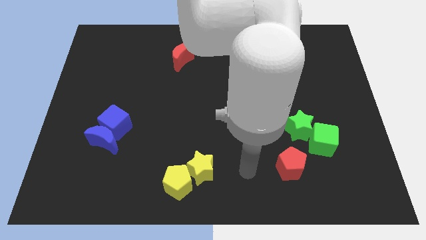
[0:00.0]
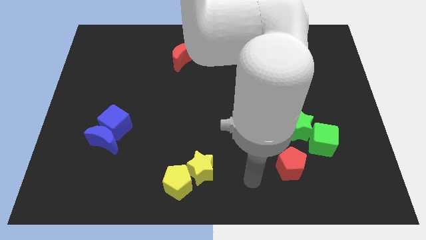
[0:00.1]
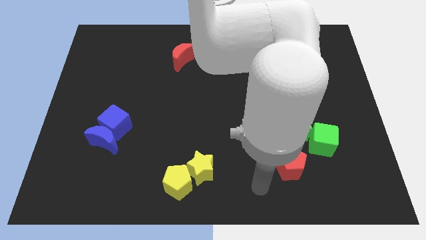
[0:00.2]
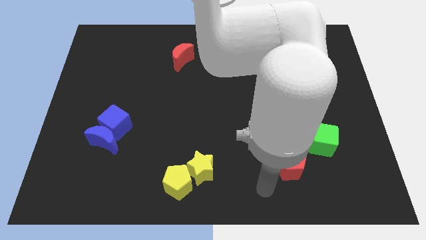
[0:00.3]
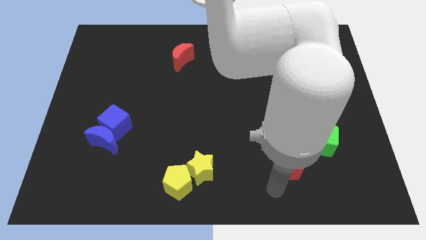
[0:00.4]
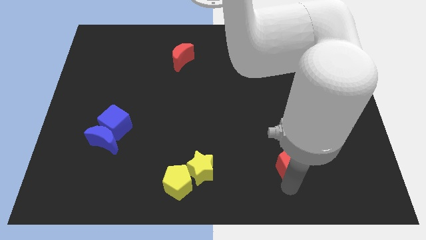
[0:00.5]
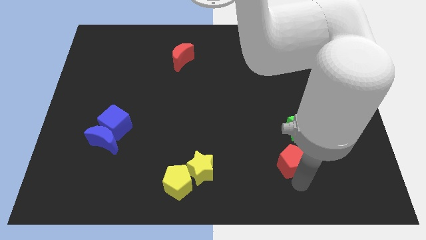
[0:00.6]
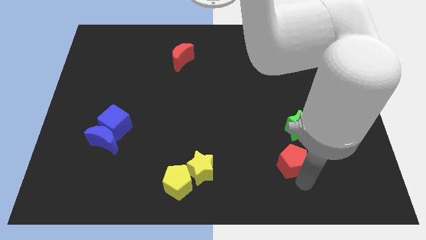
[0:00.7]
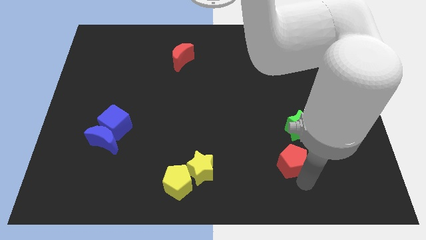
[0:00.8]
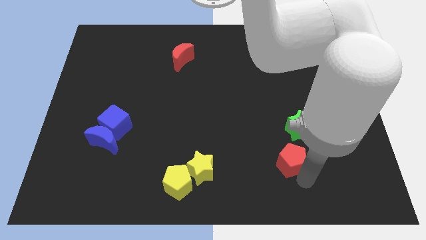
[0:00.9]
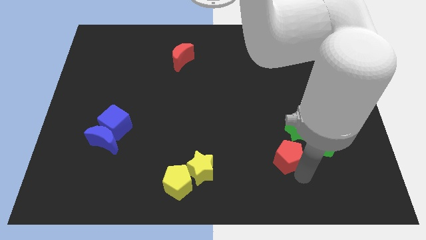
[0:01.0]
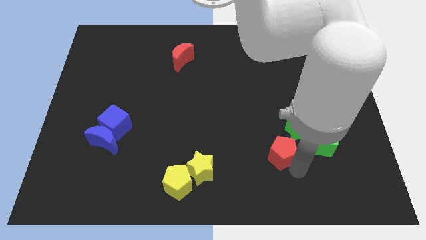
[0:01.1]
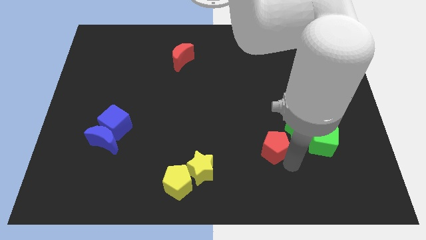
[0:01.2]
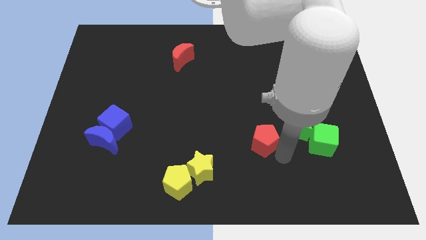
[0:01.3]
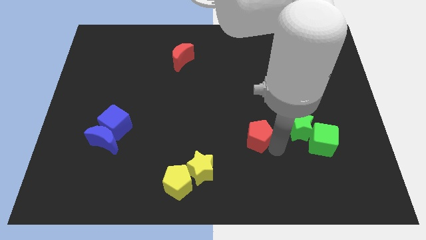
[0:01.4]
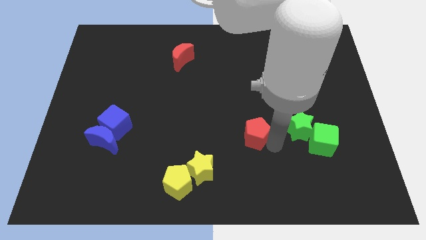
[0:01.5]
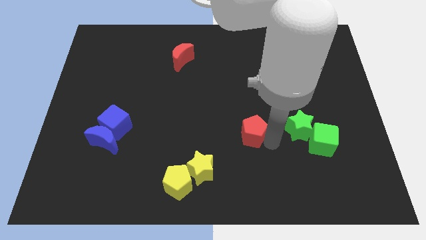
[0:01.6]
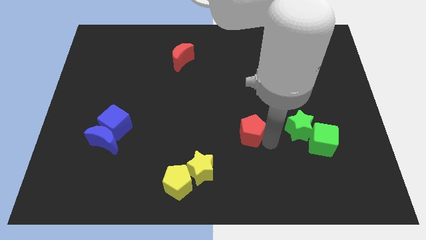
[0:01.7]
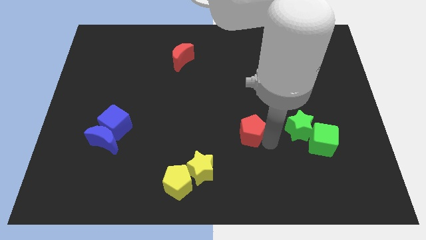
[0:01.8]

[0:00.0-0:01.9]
place the red pentagon beside the green star

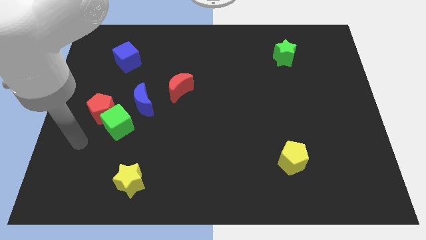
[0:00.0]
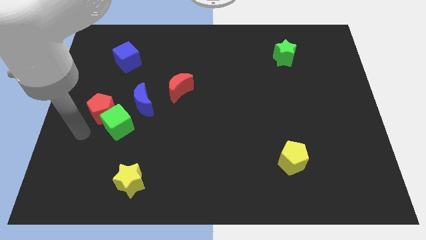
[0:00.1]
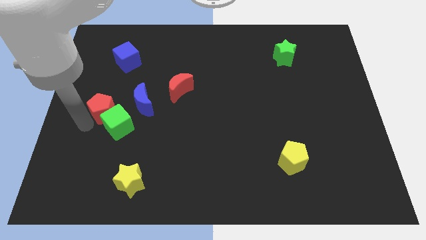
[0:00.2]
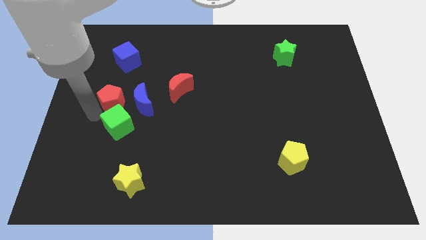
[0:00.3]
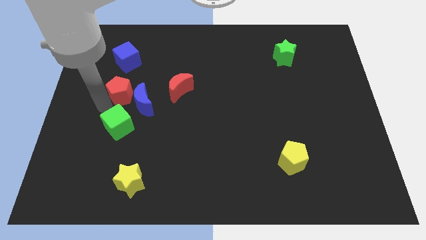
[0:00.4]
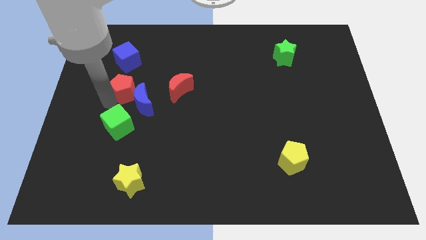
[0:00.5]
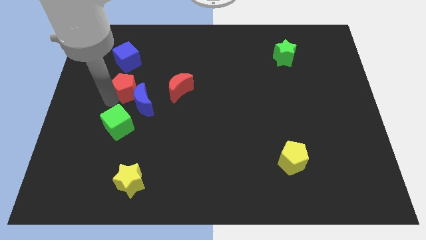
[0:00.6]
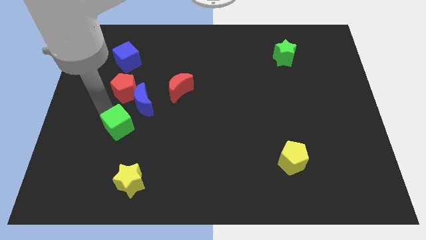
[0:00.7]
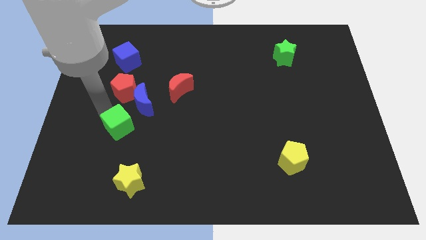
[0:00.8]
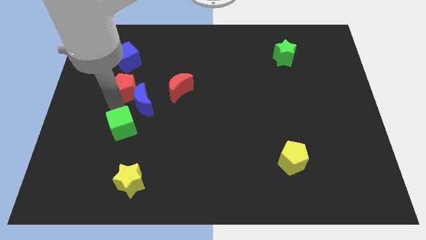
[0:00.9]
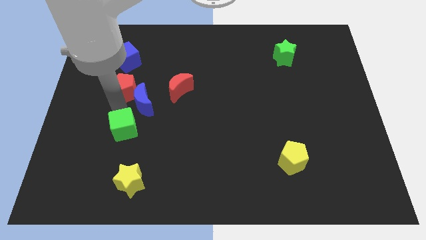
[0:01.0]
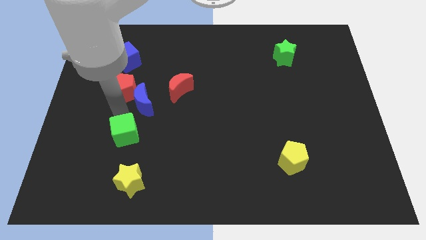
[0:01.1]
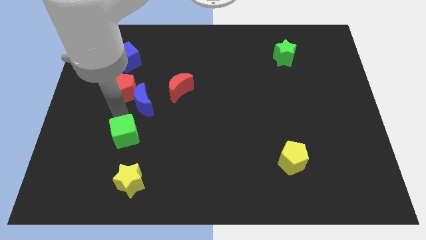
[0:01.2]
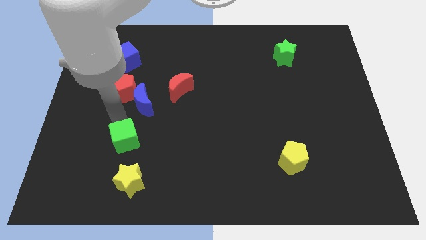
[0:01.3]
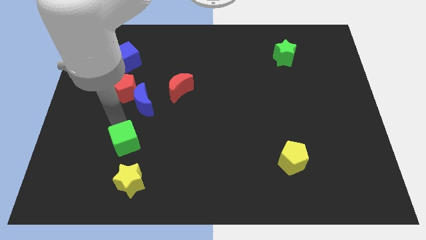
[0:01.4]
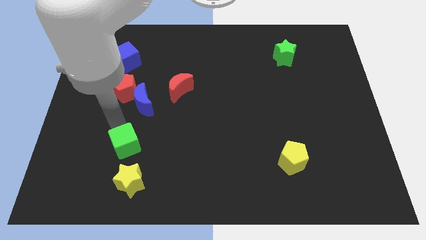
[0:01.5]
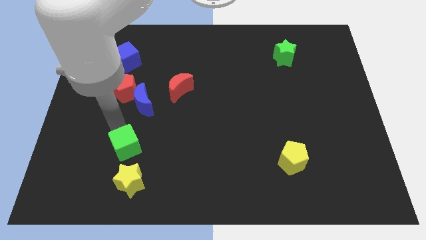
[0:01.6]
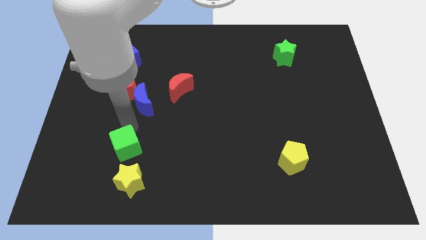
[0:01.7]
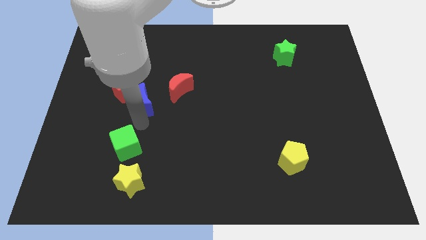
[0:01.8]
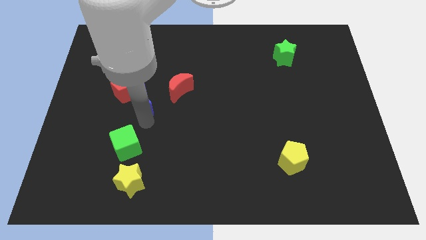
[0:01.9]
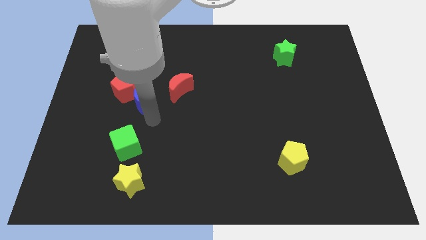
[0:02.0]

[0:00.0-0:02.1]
separate green cube and red pentagon from each other

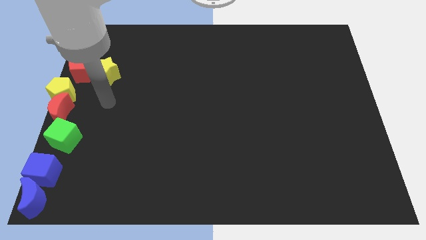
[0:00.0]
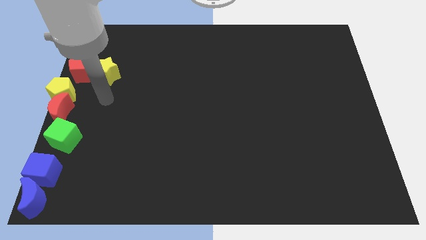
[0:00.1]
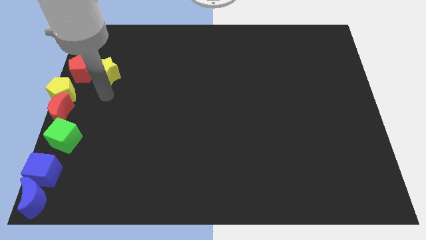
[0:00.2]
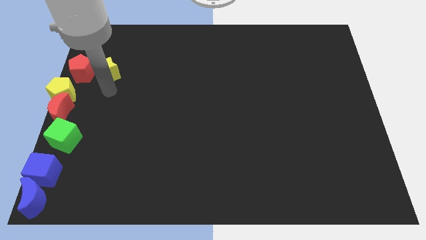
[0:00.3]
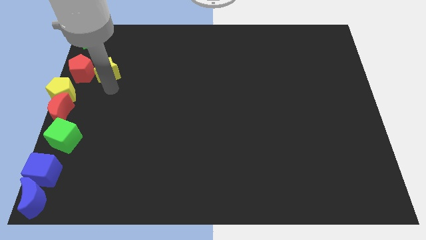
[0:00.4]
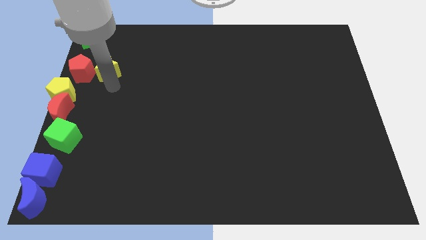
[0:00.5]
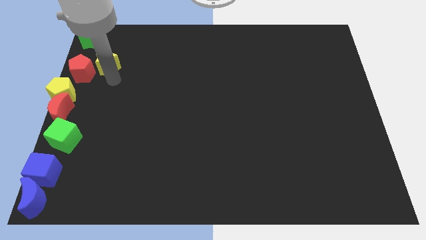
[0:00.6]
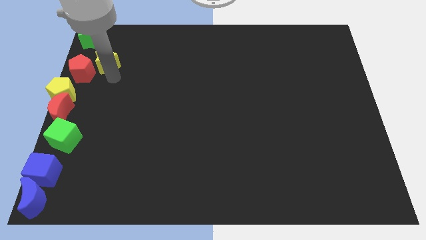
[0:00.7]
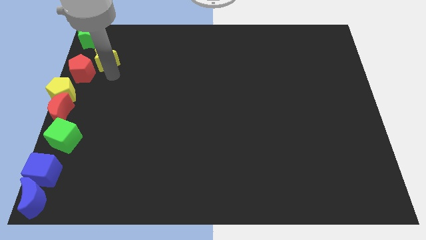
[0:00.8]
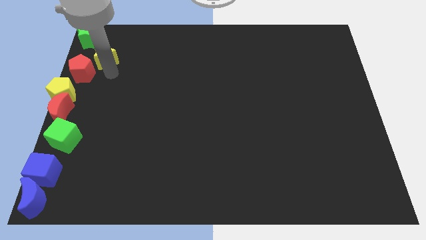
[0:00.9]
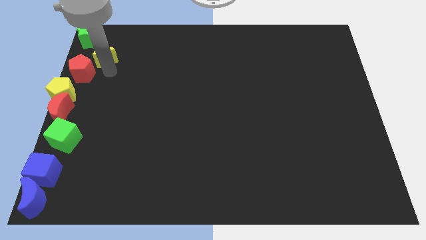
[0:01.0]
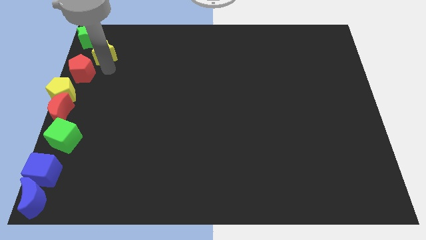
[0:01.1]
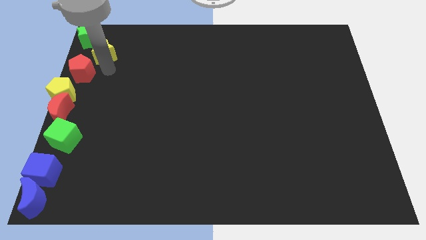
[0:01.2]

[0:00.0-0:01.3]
move the yellow star close to the green star

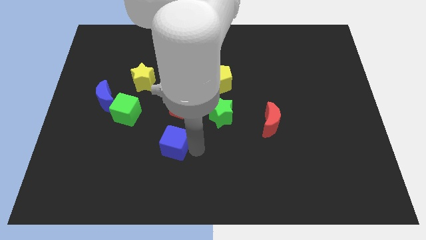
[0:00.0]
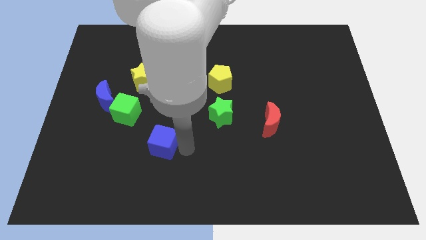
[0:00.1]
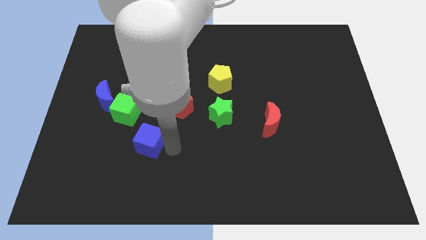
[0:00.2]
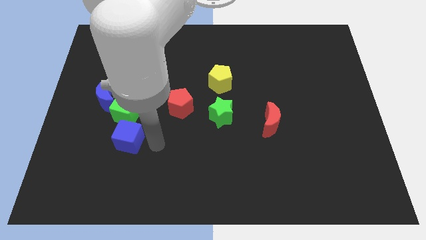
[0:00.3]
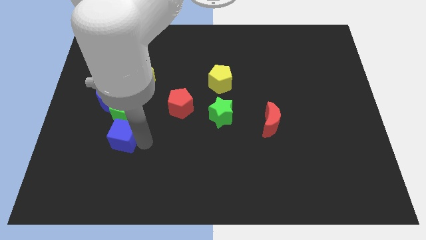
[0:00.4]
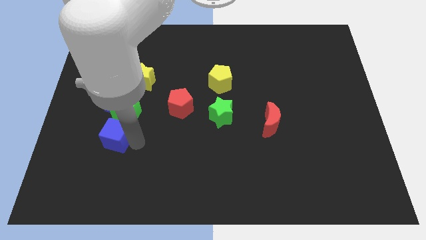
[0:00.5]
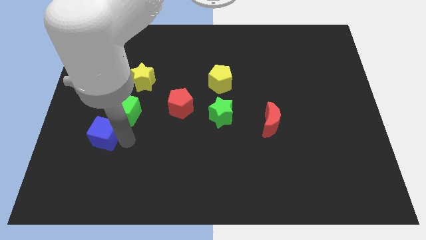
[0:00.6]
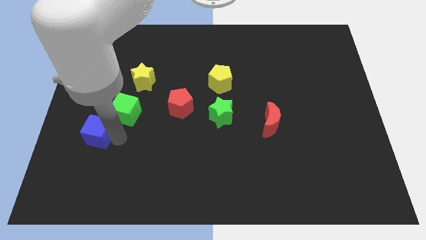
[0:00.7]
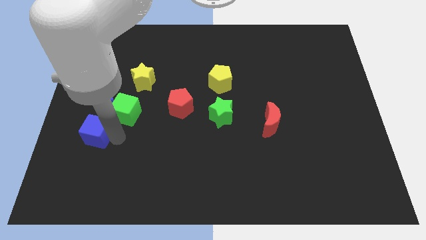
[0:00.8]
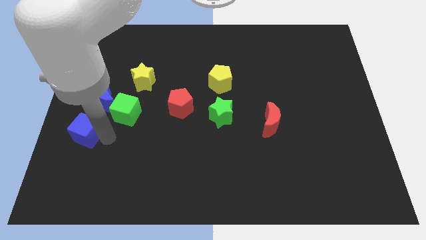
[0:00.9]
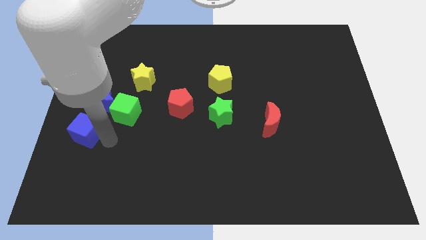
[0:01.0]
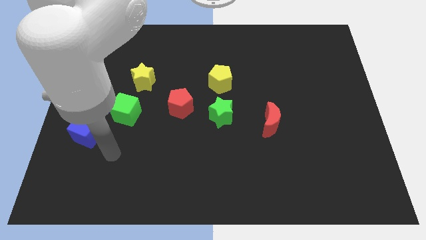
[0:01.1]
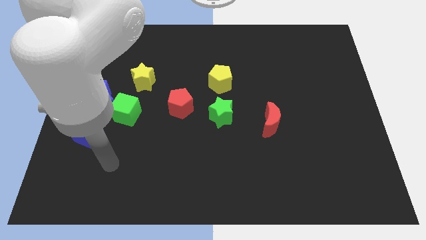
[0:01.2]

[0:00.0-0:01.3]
place blue cube to the bottom of blue moon

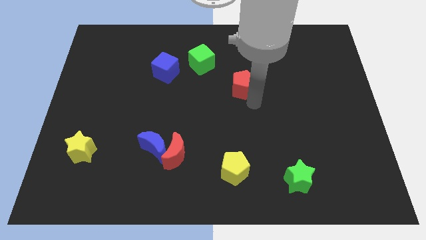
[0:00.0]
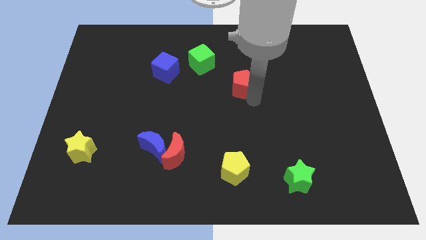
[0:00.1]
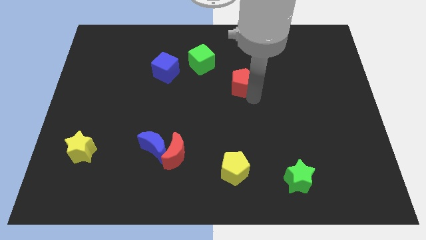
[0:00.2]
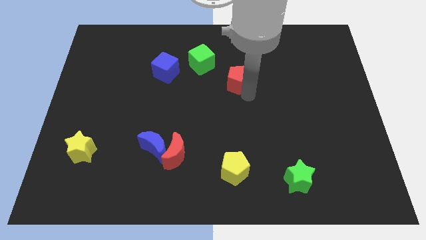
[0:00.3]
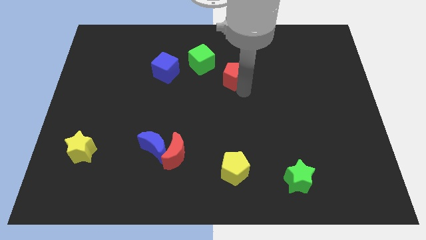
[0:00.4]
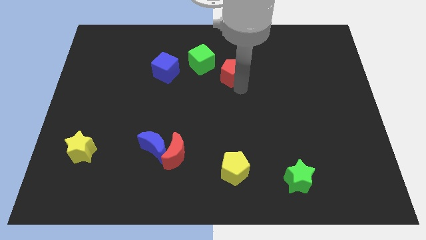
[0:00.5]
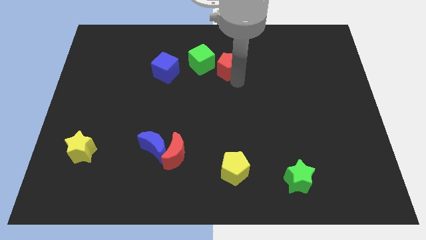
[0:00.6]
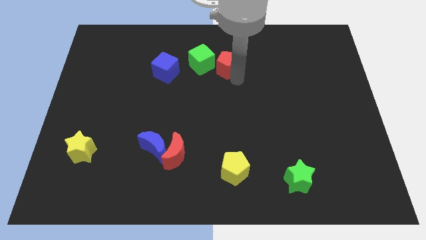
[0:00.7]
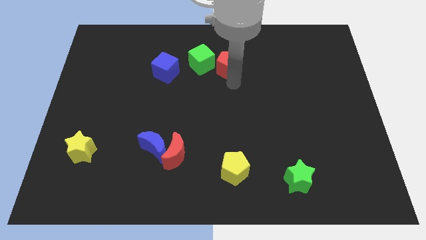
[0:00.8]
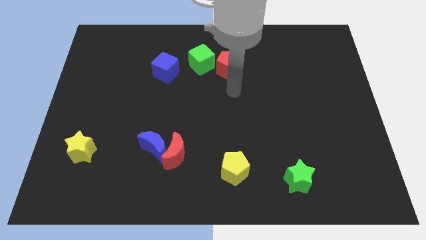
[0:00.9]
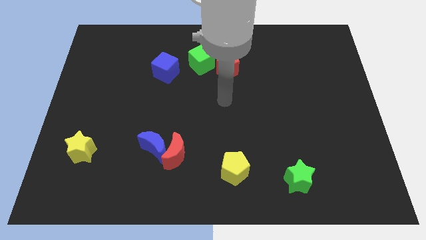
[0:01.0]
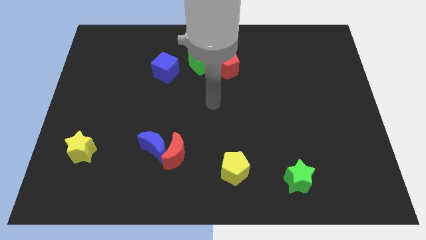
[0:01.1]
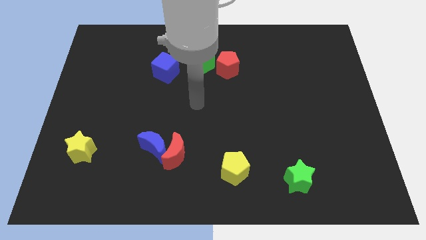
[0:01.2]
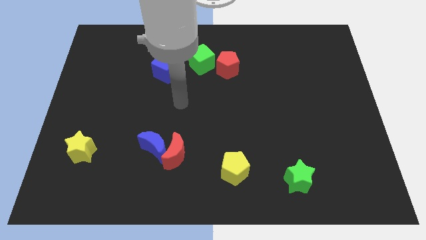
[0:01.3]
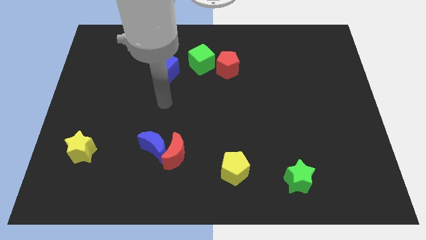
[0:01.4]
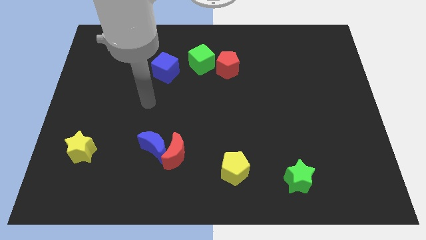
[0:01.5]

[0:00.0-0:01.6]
move the red pentagon right to the green cube

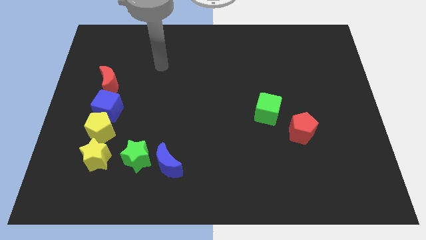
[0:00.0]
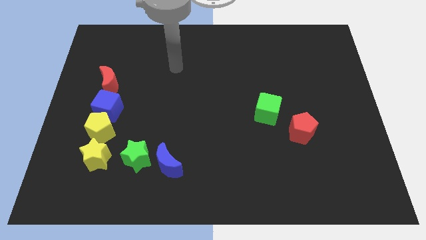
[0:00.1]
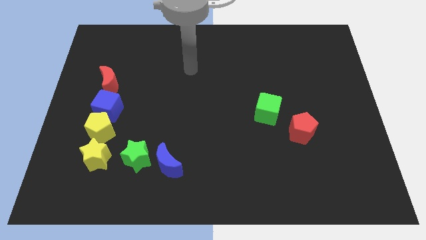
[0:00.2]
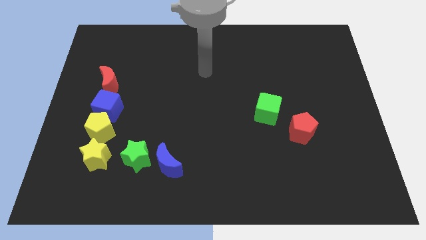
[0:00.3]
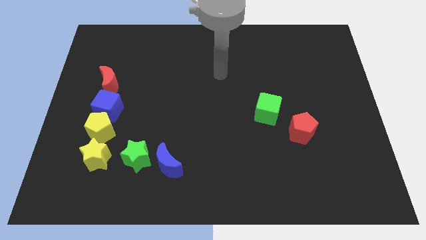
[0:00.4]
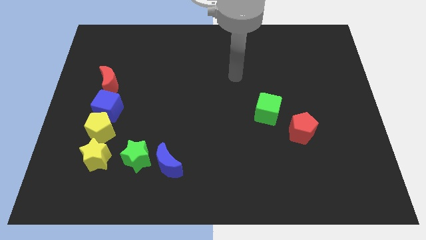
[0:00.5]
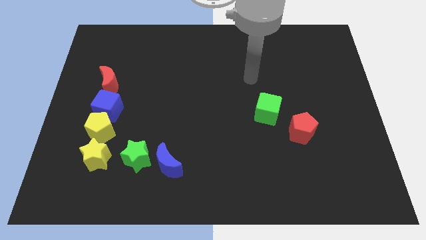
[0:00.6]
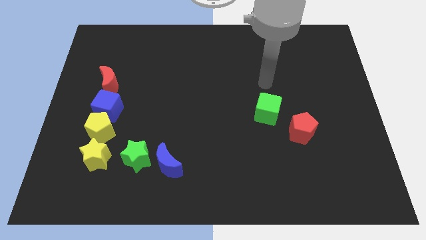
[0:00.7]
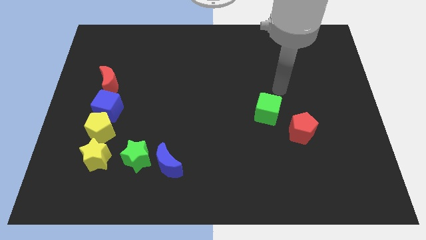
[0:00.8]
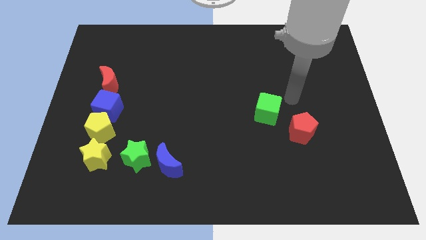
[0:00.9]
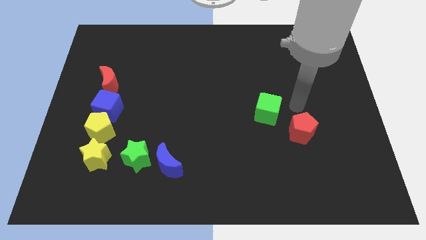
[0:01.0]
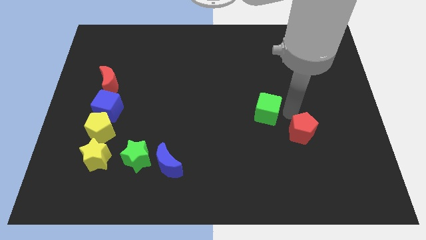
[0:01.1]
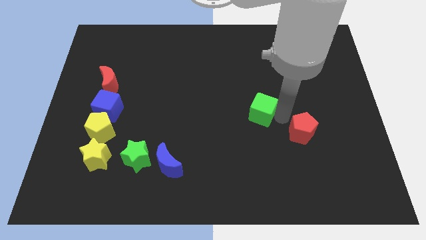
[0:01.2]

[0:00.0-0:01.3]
touch the green cube on its right
